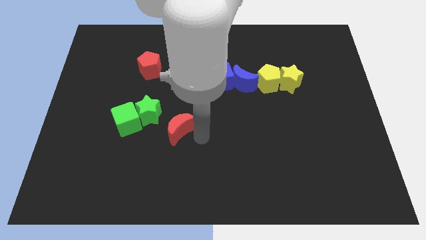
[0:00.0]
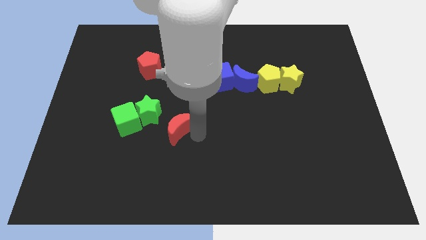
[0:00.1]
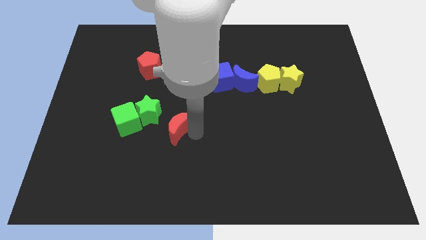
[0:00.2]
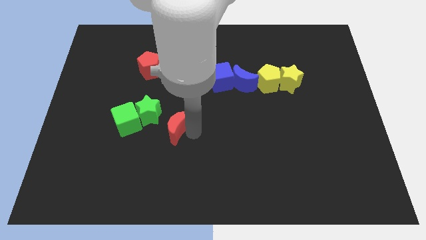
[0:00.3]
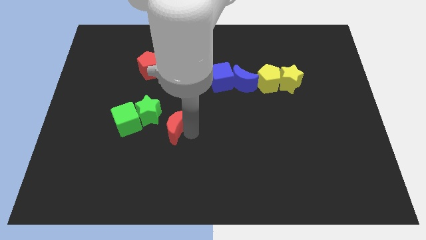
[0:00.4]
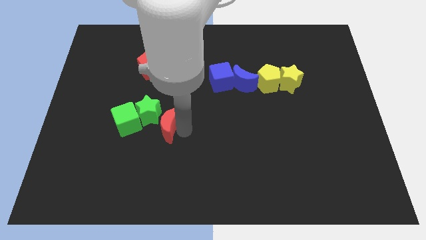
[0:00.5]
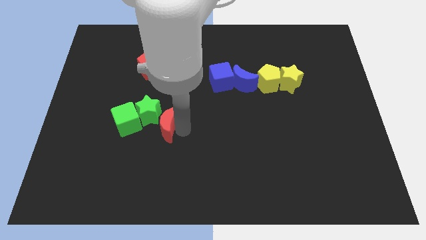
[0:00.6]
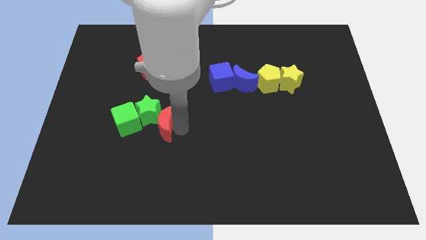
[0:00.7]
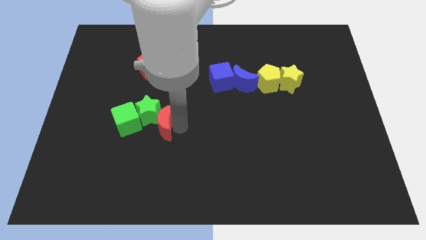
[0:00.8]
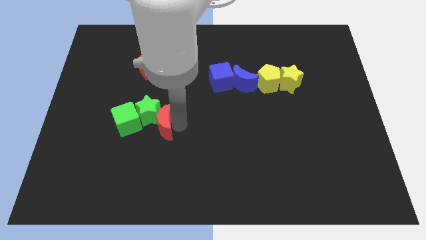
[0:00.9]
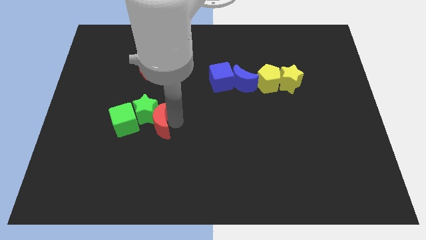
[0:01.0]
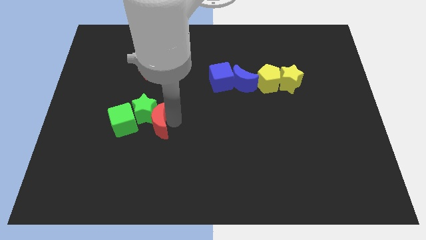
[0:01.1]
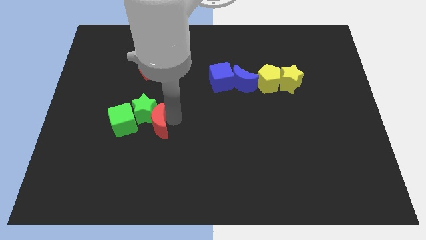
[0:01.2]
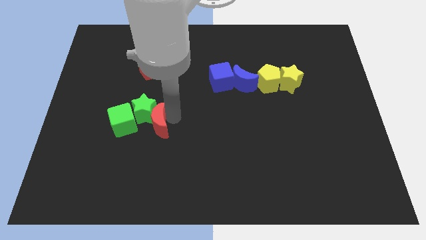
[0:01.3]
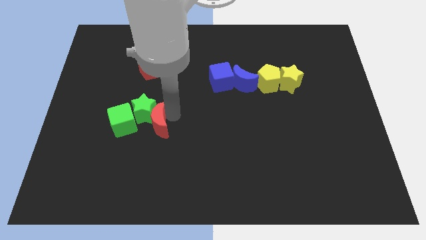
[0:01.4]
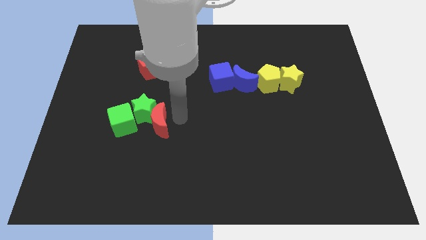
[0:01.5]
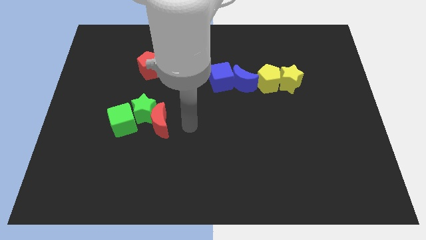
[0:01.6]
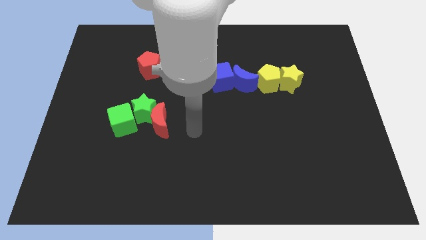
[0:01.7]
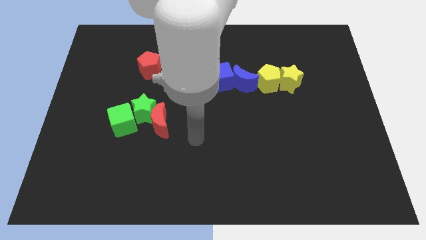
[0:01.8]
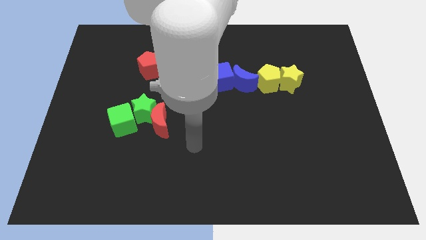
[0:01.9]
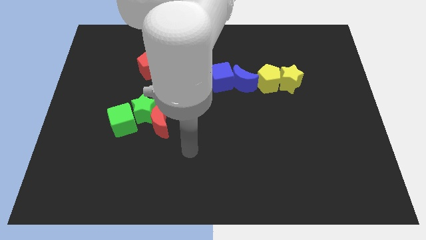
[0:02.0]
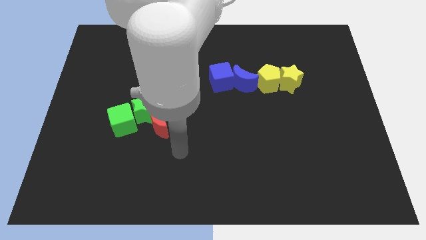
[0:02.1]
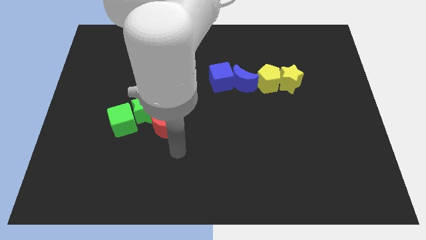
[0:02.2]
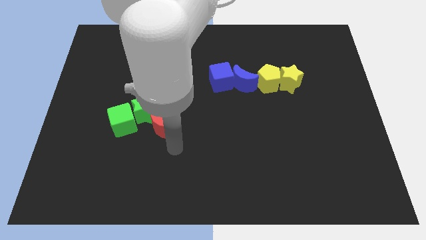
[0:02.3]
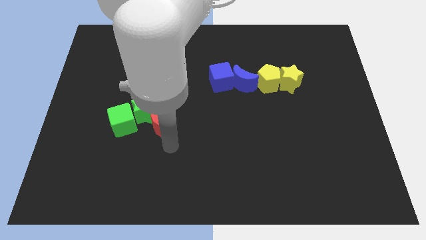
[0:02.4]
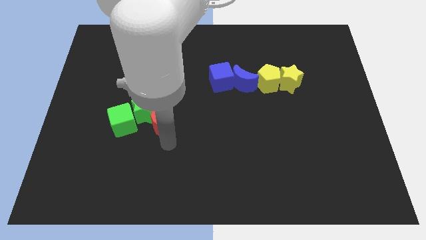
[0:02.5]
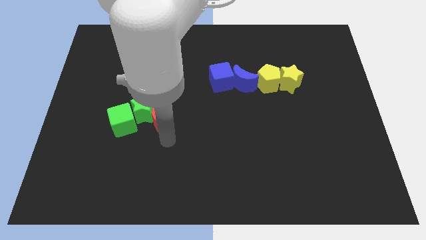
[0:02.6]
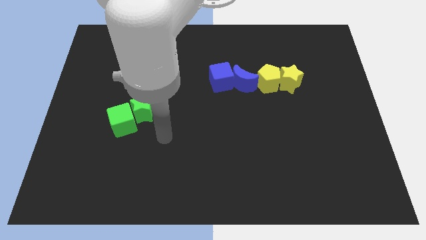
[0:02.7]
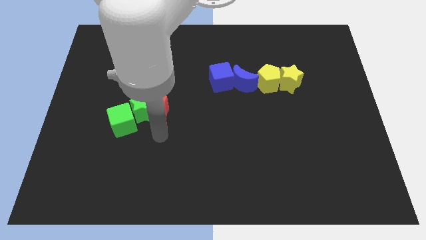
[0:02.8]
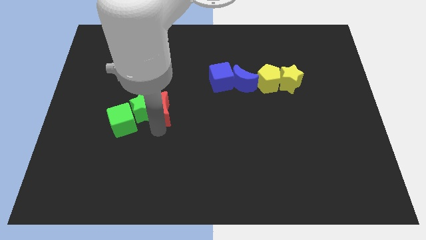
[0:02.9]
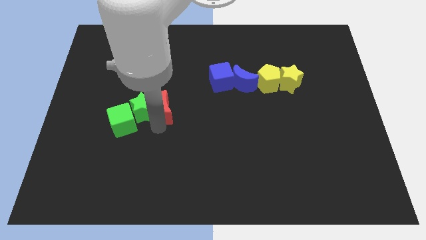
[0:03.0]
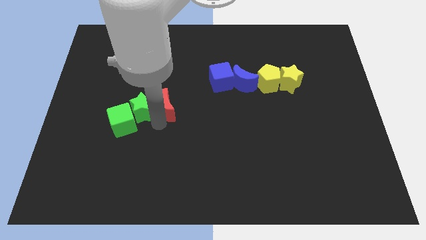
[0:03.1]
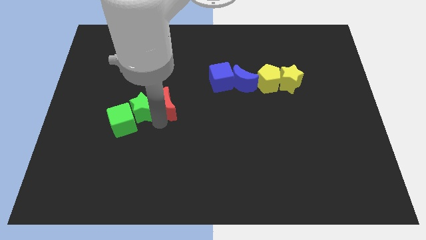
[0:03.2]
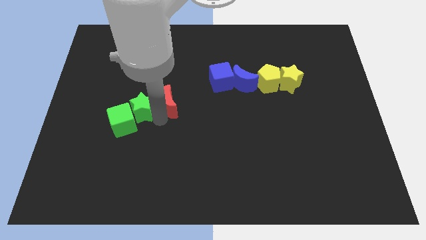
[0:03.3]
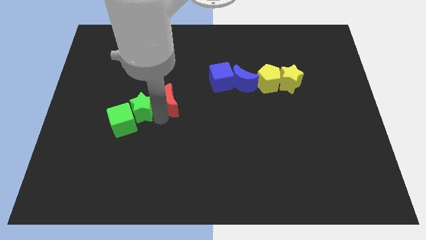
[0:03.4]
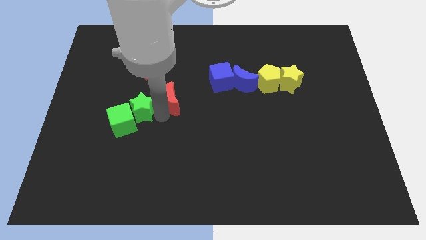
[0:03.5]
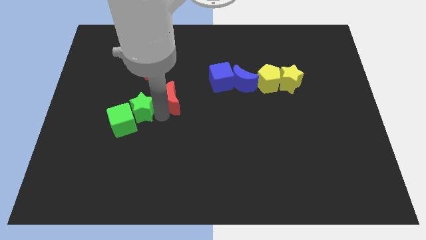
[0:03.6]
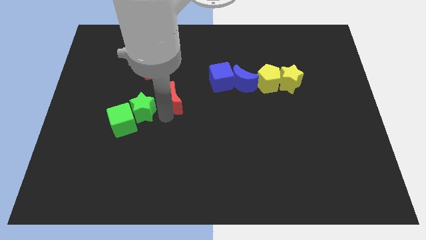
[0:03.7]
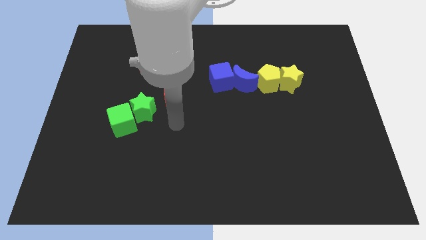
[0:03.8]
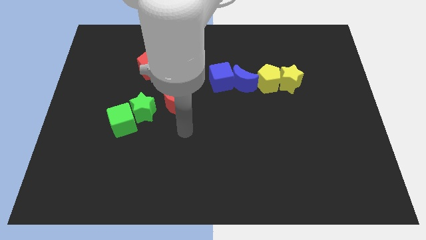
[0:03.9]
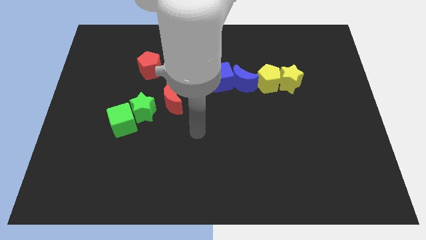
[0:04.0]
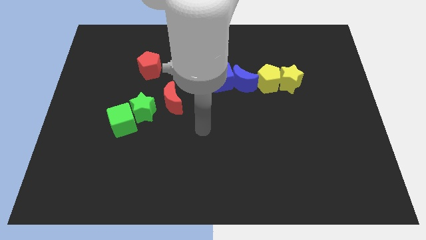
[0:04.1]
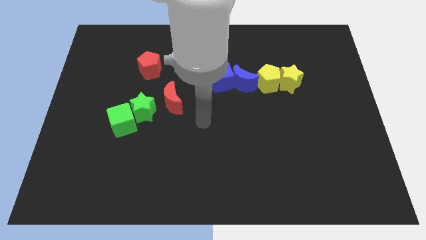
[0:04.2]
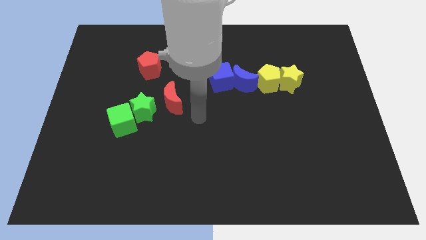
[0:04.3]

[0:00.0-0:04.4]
place red moon to the bottom right of red pentagon

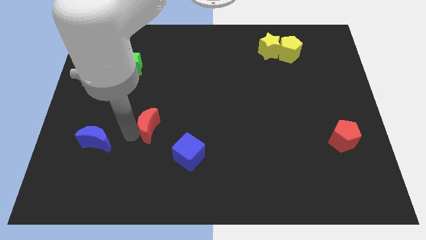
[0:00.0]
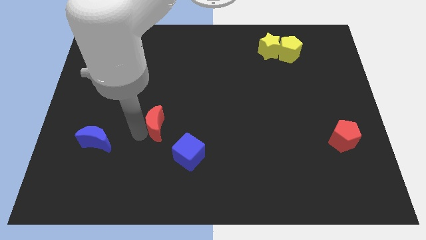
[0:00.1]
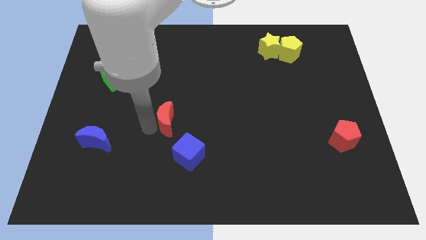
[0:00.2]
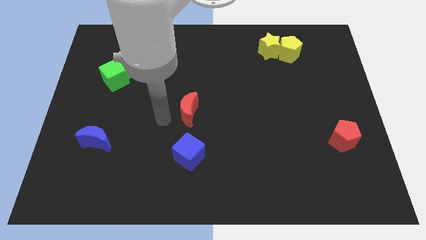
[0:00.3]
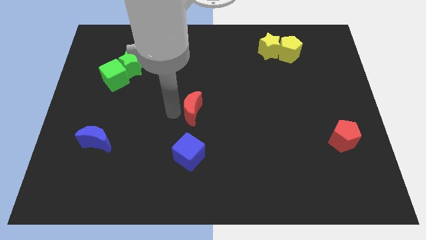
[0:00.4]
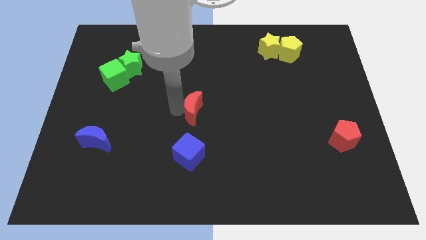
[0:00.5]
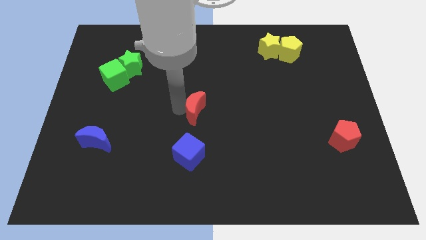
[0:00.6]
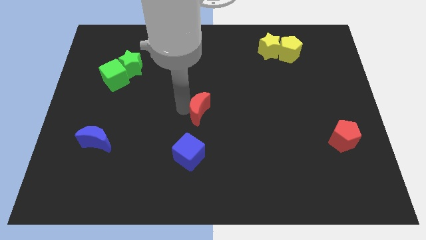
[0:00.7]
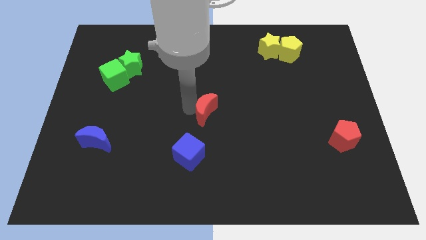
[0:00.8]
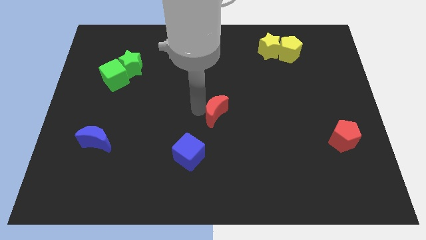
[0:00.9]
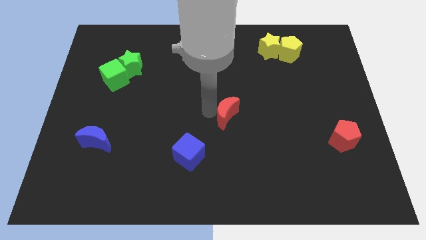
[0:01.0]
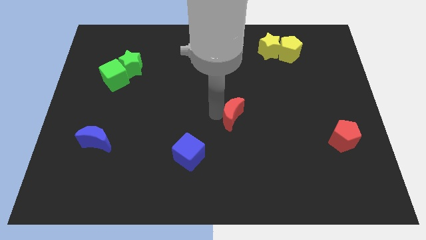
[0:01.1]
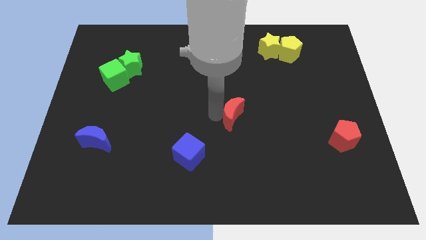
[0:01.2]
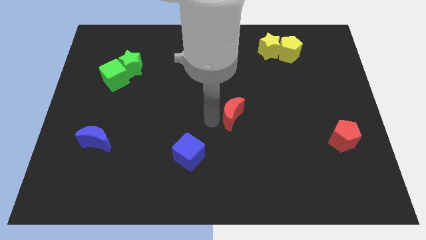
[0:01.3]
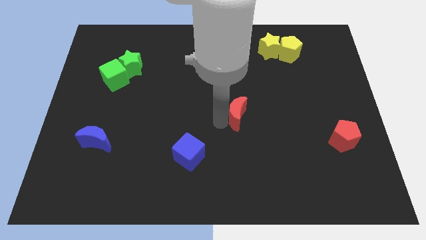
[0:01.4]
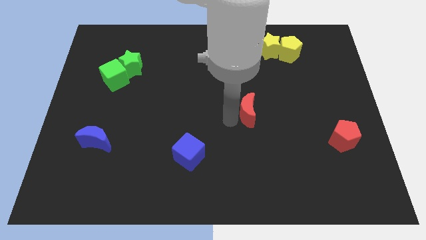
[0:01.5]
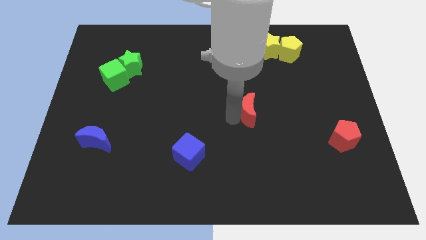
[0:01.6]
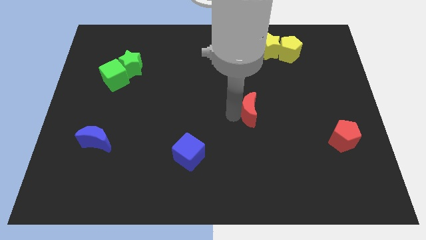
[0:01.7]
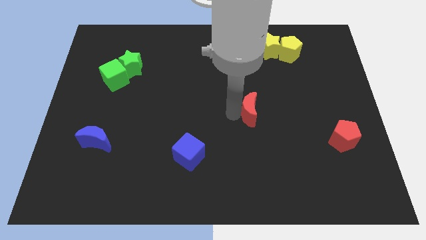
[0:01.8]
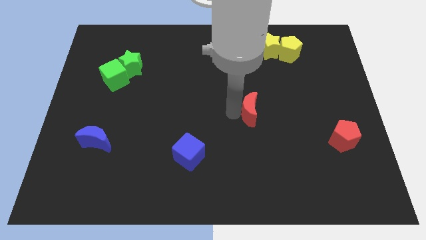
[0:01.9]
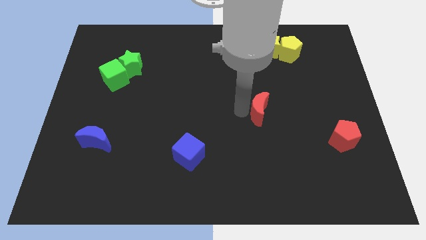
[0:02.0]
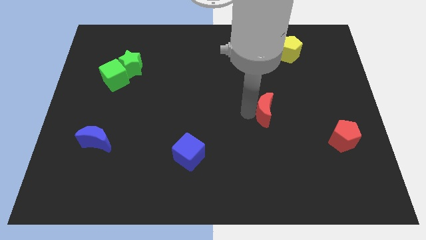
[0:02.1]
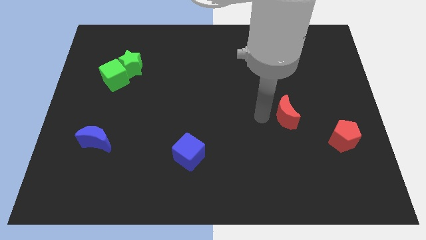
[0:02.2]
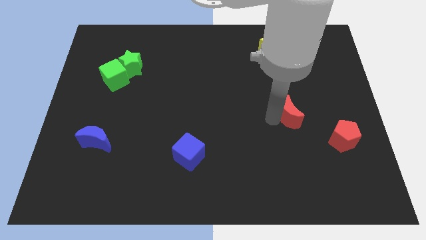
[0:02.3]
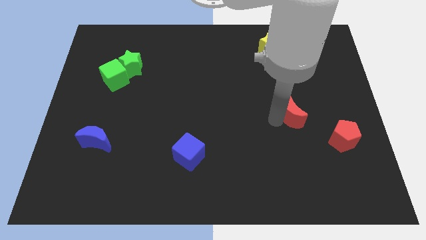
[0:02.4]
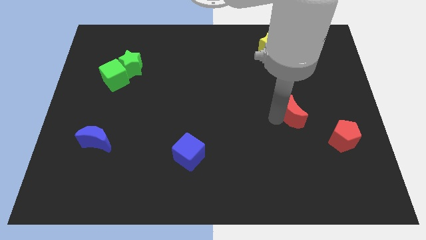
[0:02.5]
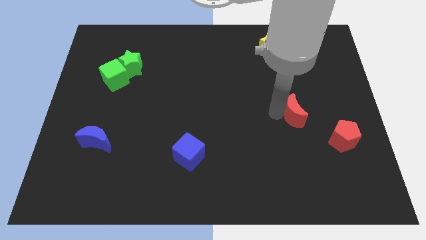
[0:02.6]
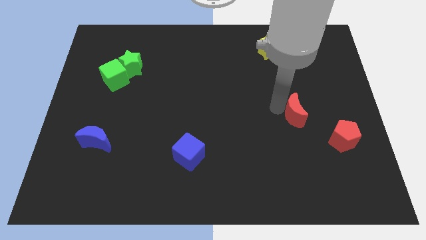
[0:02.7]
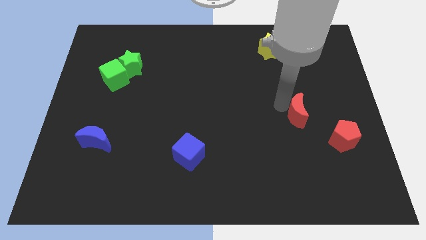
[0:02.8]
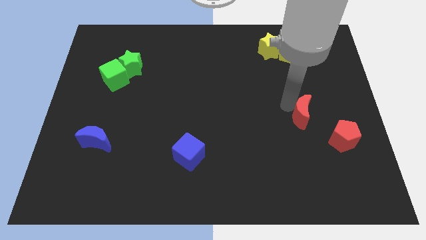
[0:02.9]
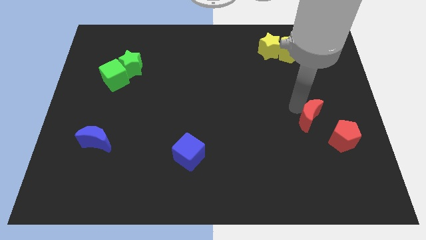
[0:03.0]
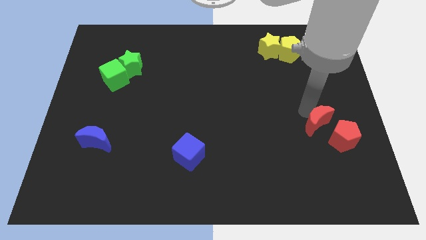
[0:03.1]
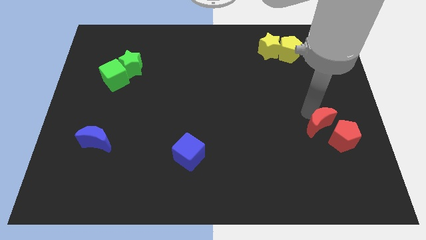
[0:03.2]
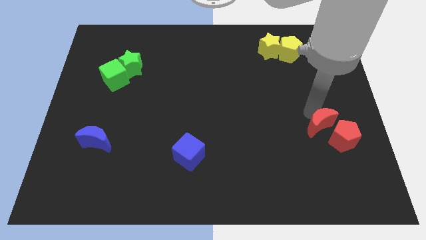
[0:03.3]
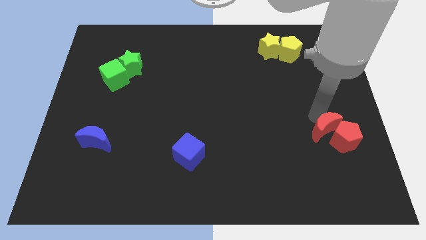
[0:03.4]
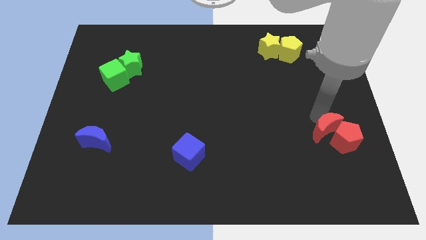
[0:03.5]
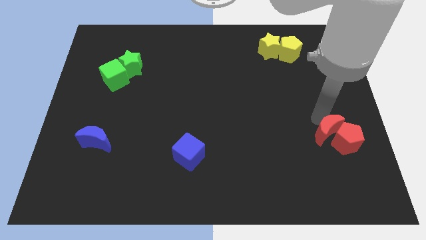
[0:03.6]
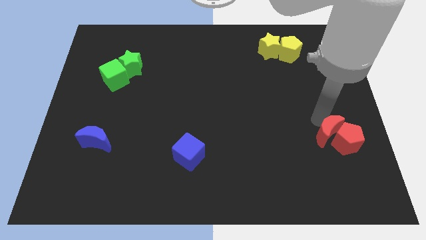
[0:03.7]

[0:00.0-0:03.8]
move the red moon into the red pentagon

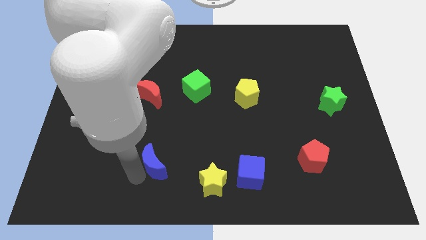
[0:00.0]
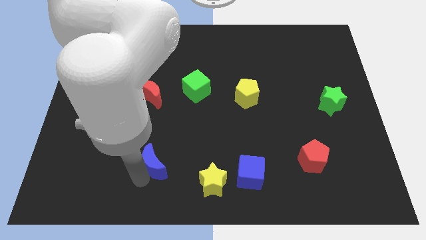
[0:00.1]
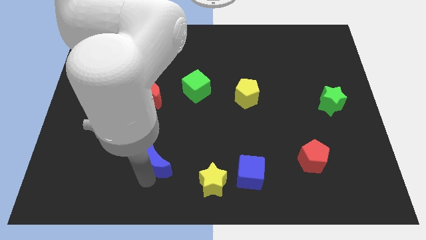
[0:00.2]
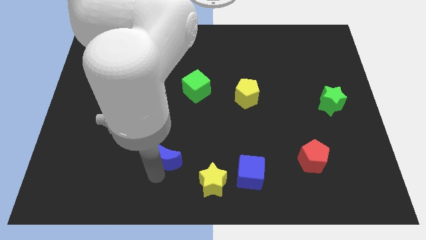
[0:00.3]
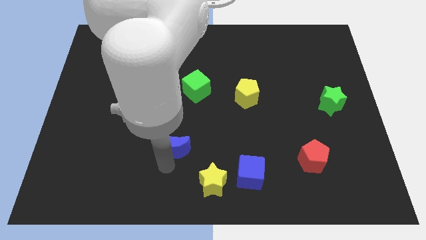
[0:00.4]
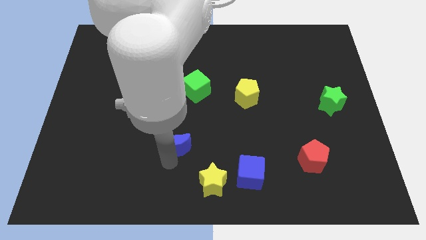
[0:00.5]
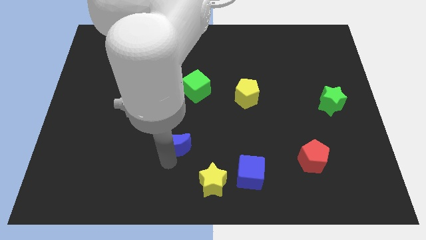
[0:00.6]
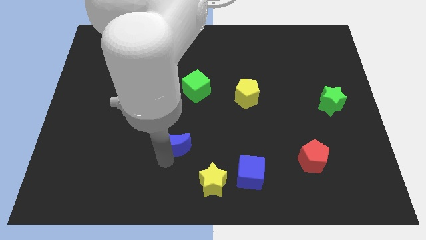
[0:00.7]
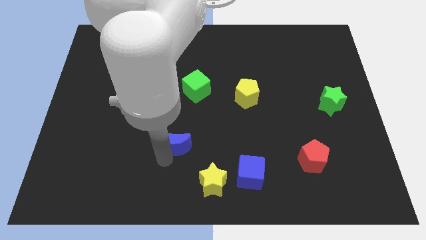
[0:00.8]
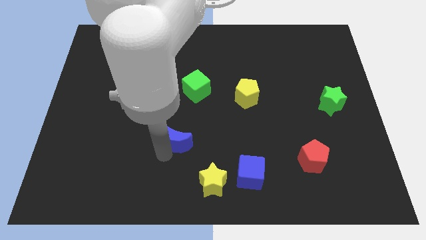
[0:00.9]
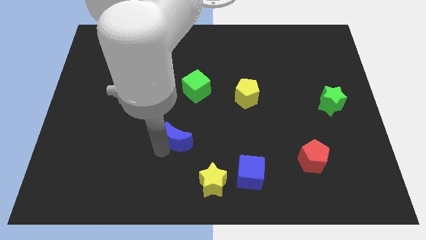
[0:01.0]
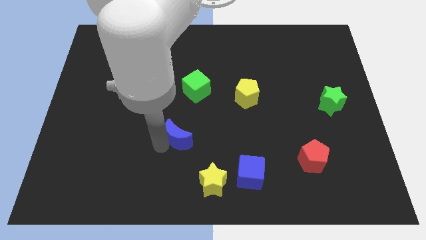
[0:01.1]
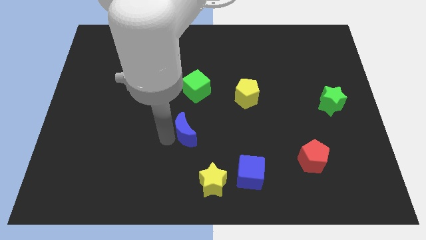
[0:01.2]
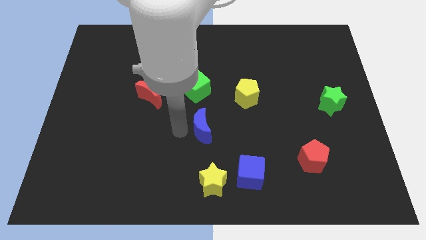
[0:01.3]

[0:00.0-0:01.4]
push the blue crescent to the bottom of the green cube
